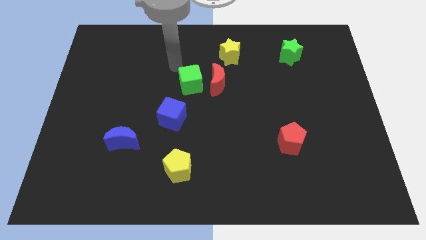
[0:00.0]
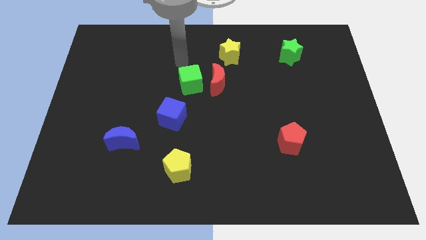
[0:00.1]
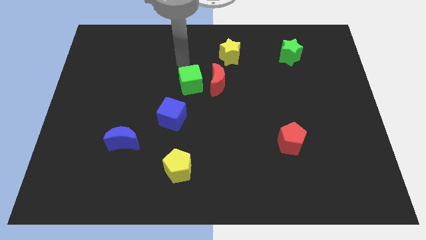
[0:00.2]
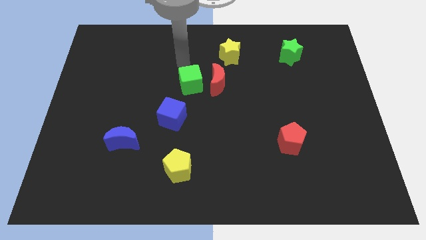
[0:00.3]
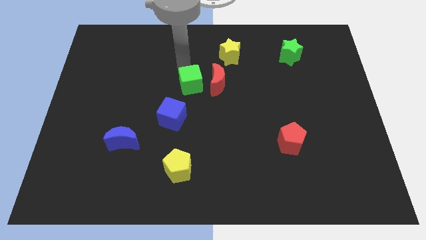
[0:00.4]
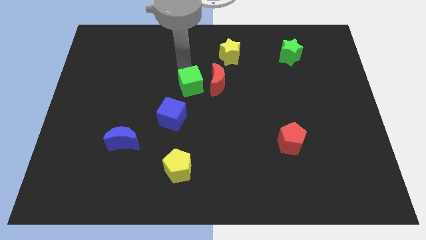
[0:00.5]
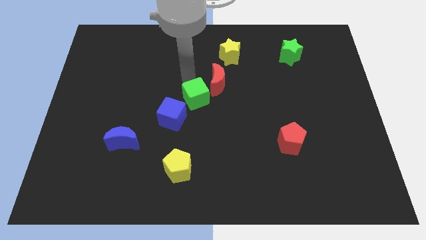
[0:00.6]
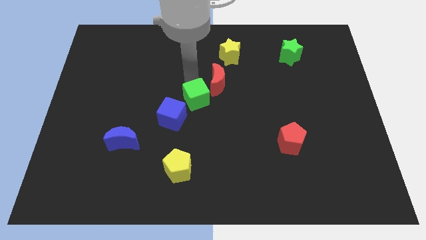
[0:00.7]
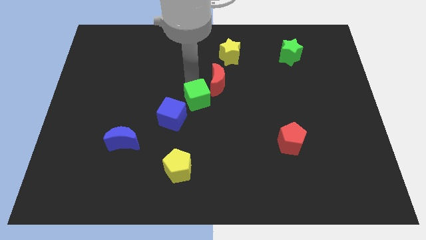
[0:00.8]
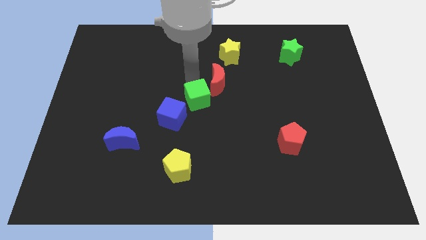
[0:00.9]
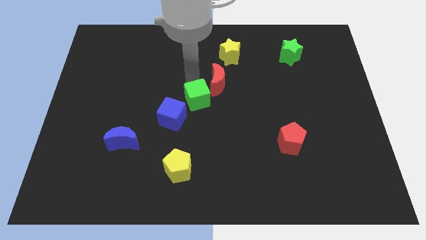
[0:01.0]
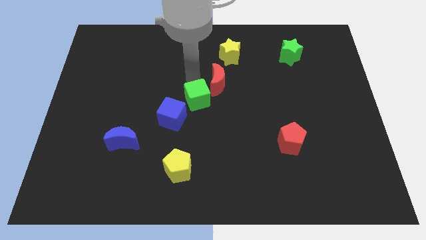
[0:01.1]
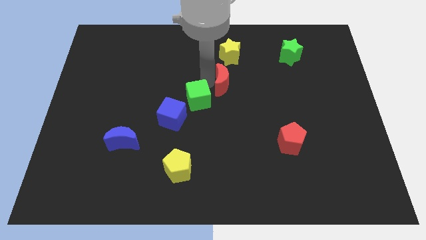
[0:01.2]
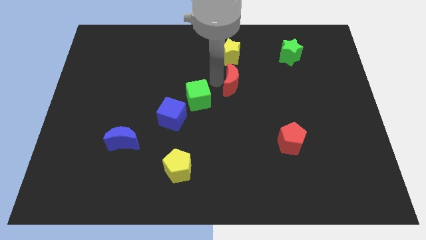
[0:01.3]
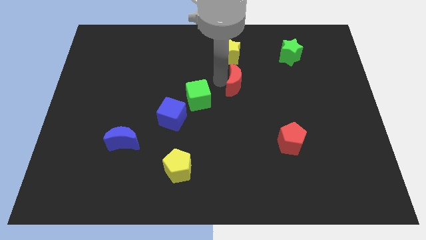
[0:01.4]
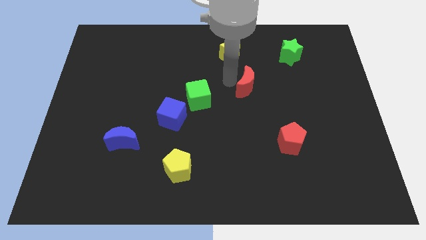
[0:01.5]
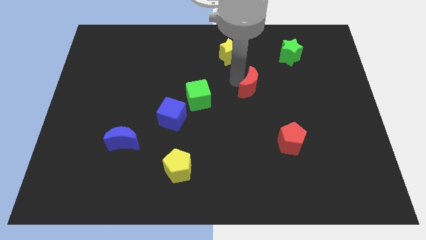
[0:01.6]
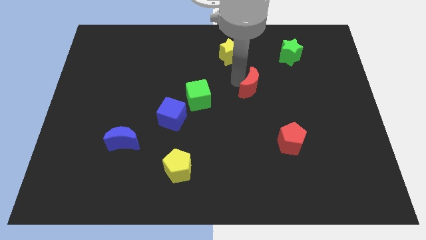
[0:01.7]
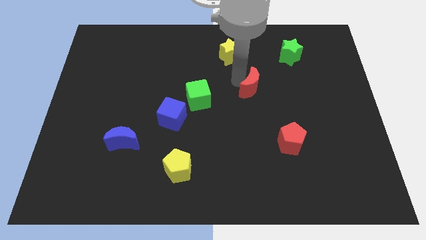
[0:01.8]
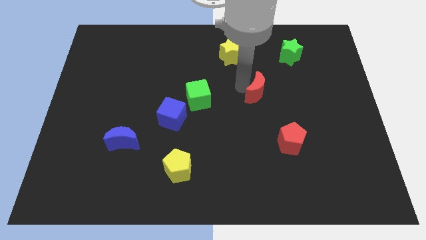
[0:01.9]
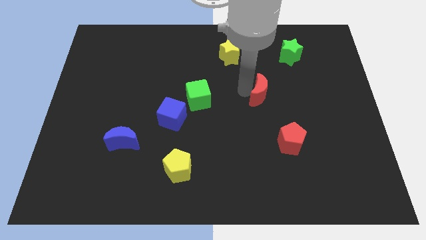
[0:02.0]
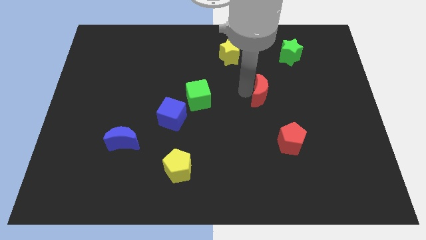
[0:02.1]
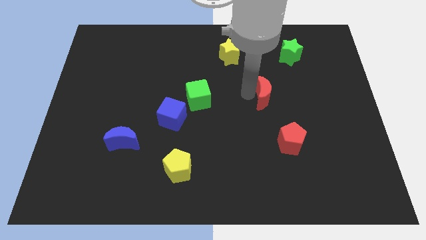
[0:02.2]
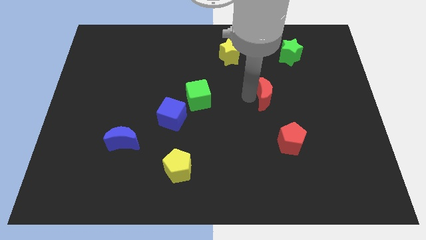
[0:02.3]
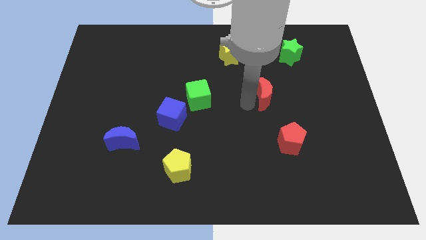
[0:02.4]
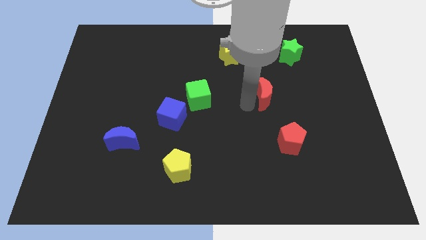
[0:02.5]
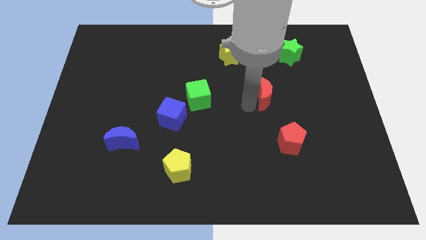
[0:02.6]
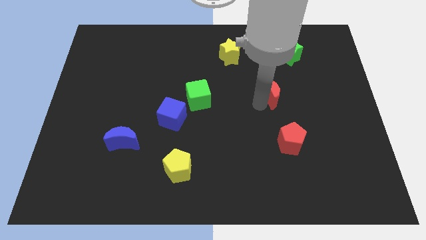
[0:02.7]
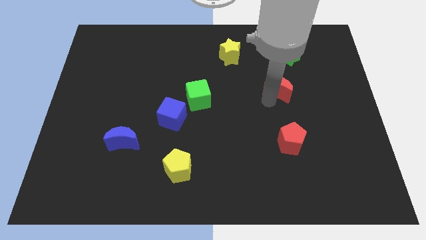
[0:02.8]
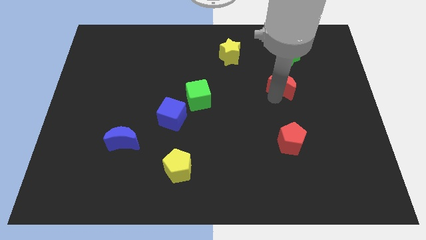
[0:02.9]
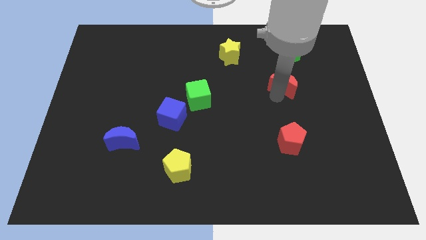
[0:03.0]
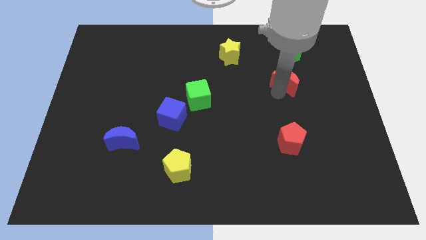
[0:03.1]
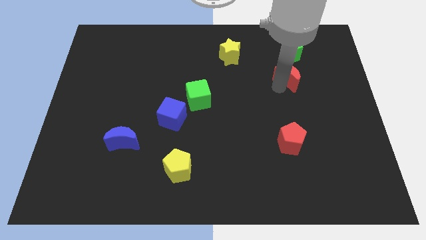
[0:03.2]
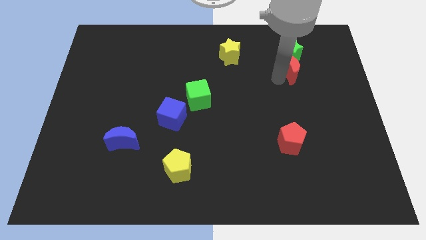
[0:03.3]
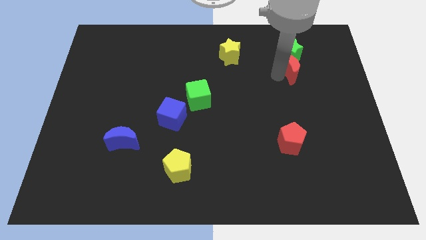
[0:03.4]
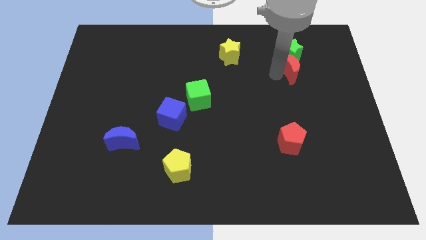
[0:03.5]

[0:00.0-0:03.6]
place the red moon in between the green star and red pentagon

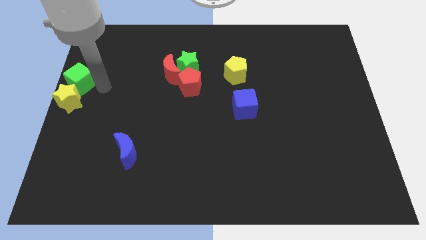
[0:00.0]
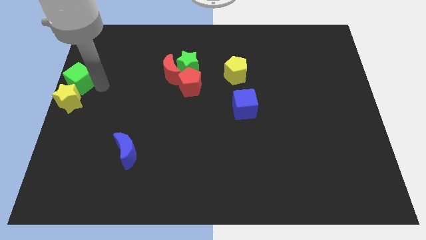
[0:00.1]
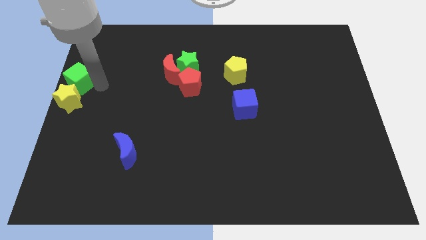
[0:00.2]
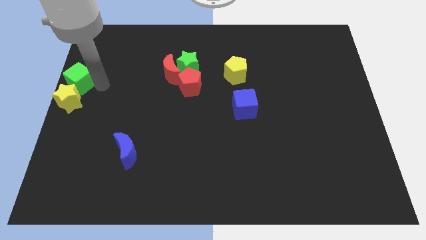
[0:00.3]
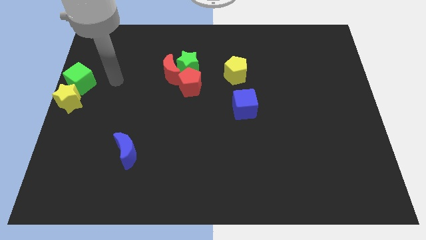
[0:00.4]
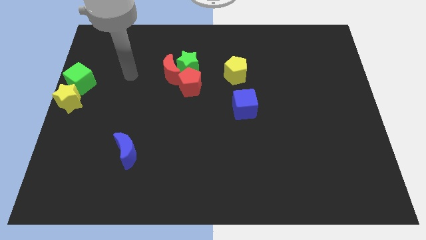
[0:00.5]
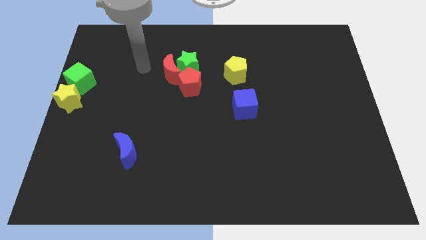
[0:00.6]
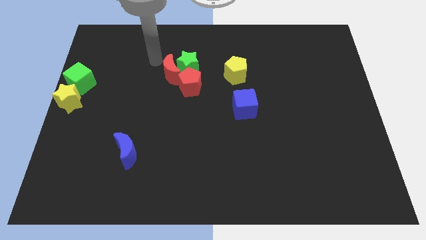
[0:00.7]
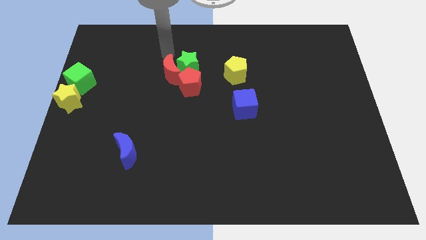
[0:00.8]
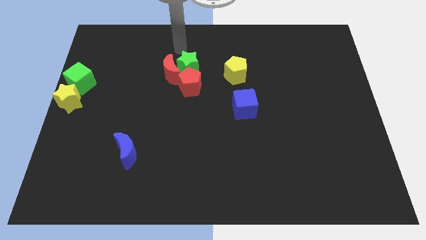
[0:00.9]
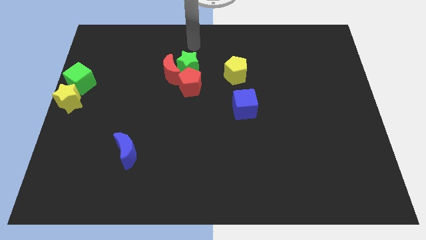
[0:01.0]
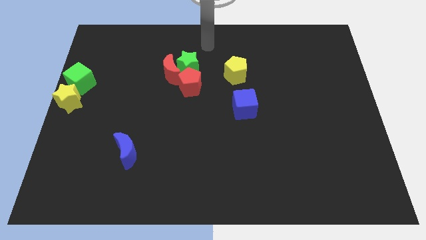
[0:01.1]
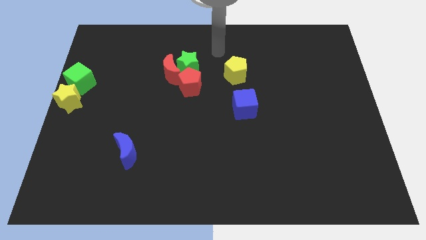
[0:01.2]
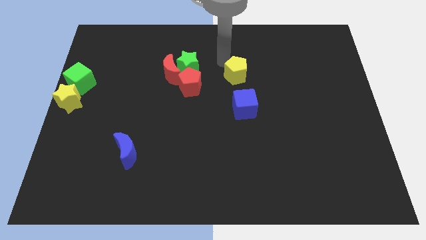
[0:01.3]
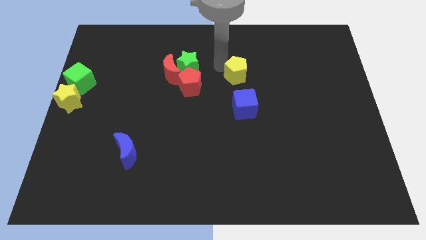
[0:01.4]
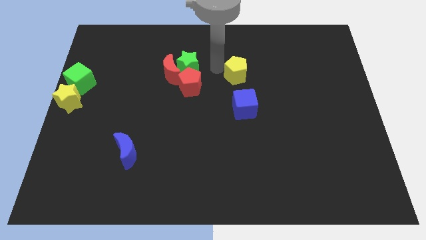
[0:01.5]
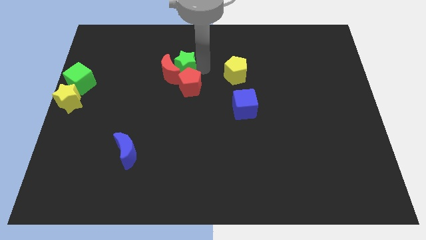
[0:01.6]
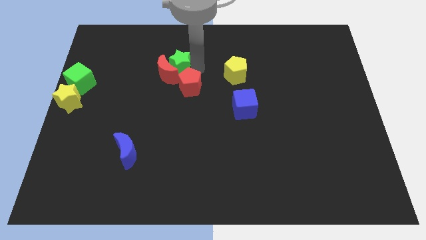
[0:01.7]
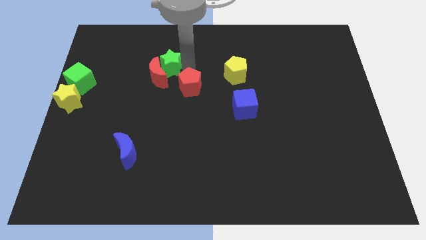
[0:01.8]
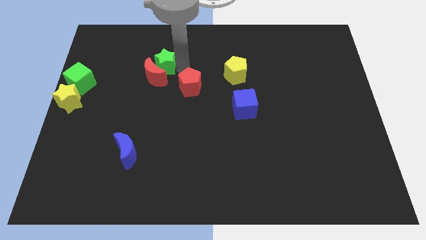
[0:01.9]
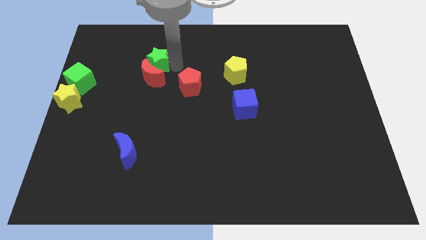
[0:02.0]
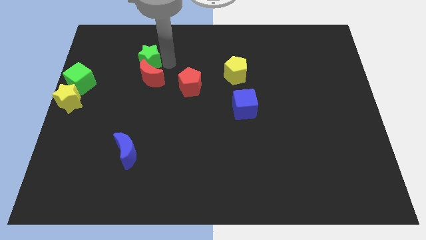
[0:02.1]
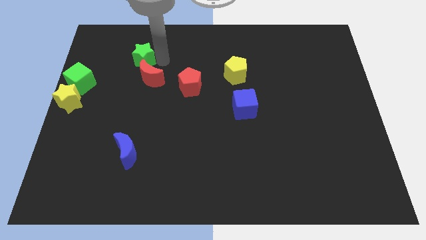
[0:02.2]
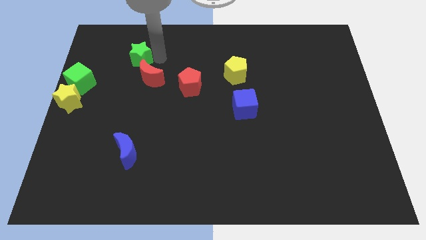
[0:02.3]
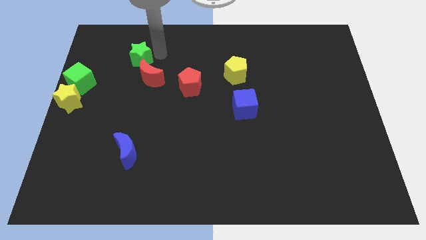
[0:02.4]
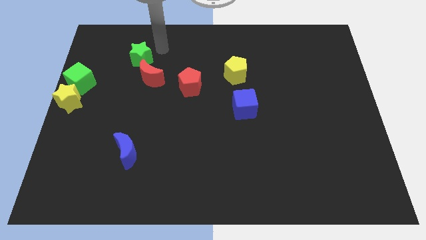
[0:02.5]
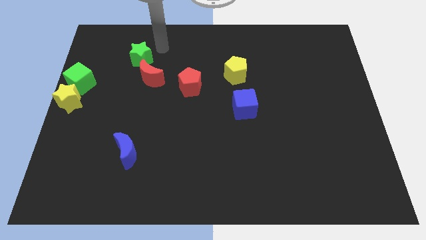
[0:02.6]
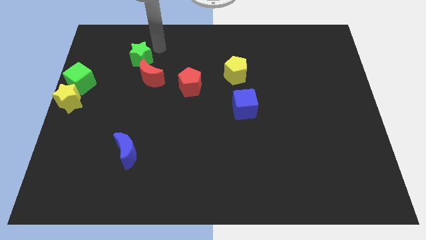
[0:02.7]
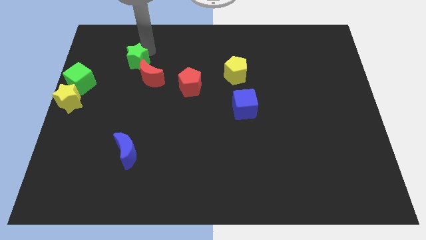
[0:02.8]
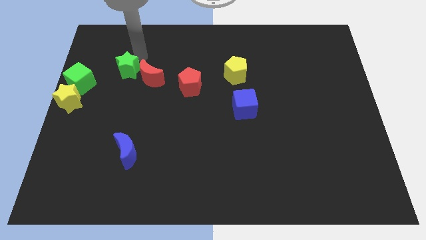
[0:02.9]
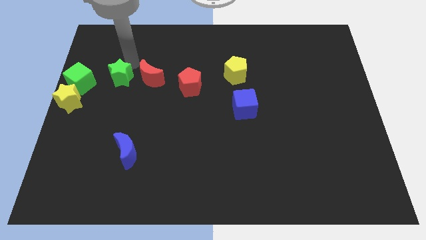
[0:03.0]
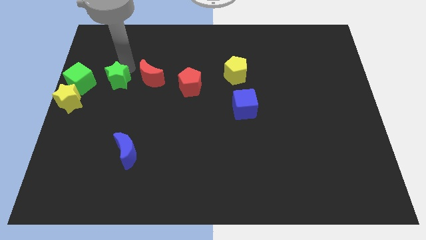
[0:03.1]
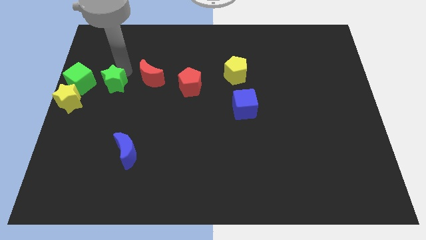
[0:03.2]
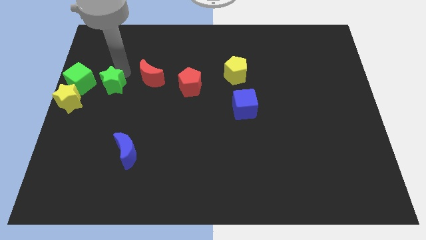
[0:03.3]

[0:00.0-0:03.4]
separate the green star from the blocks

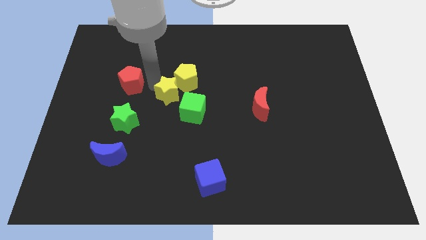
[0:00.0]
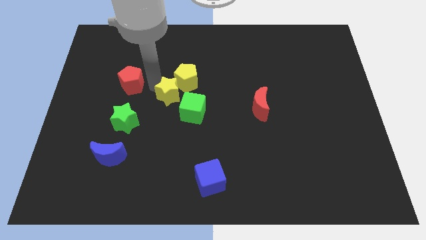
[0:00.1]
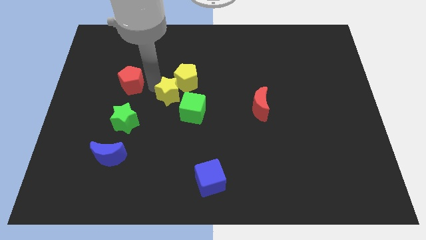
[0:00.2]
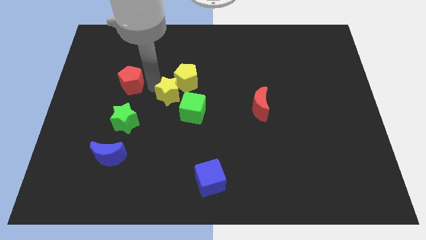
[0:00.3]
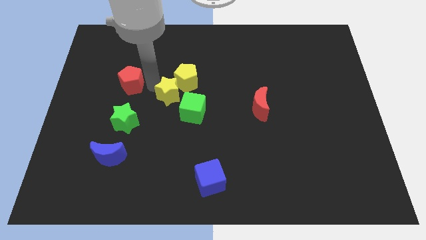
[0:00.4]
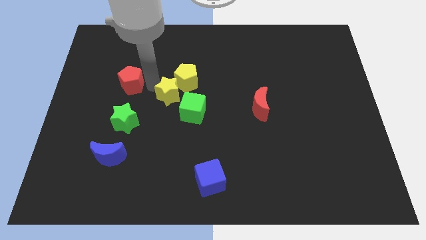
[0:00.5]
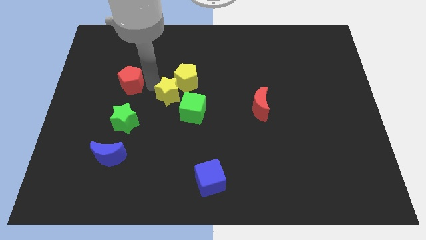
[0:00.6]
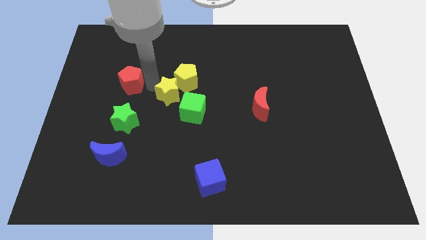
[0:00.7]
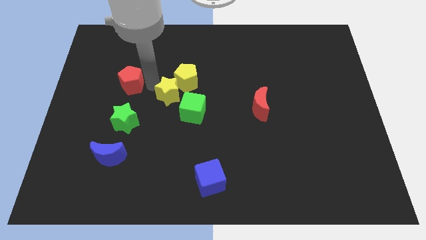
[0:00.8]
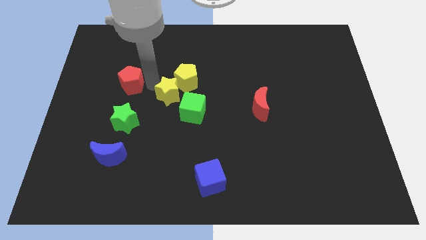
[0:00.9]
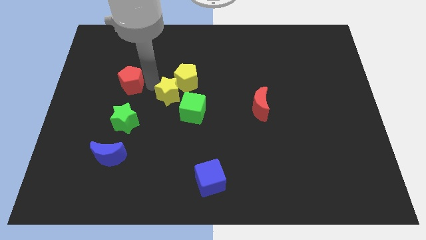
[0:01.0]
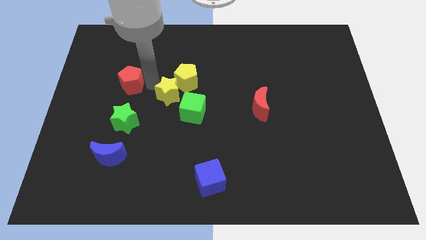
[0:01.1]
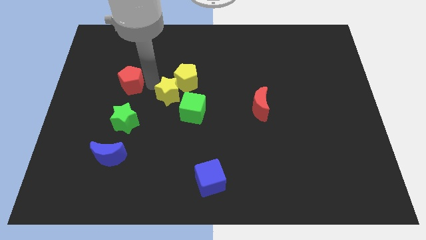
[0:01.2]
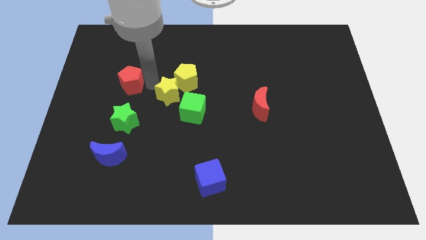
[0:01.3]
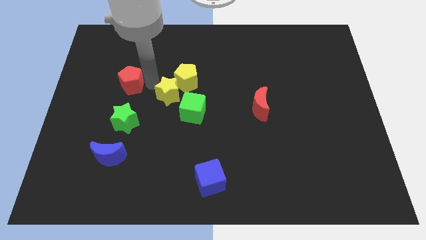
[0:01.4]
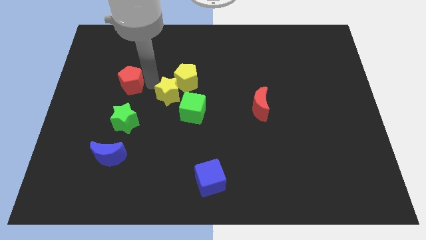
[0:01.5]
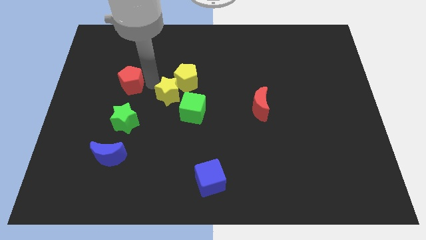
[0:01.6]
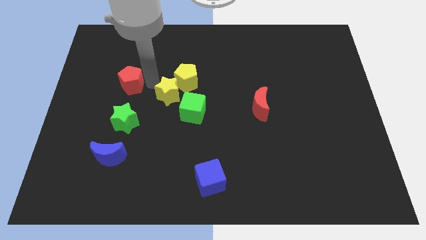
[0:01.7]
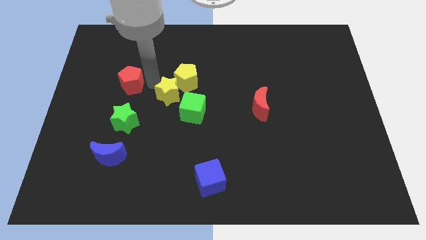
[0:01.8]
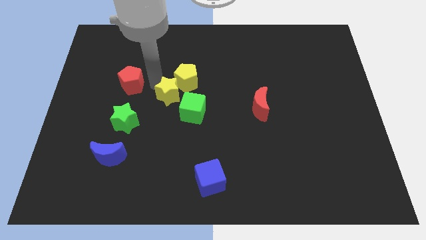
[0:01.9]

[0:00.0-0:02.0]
move your arm between yellow star and red pentagon
